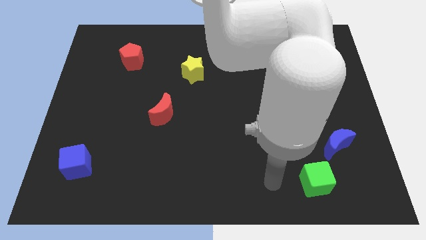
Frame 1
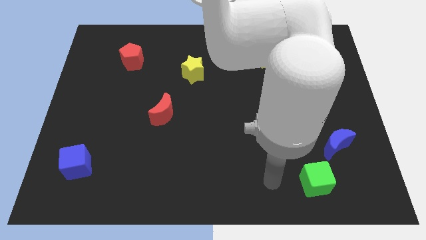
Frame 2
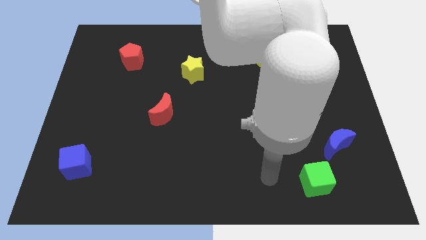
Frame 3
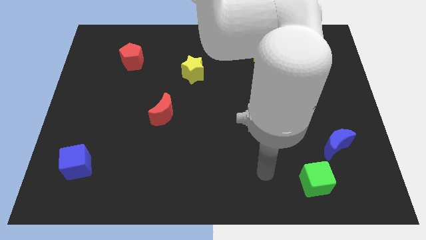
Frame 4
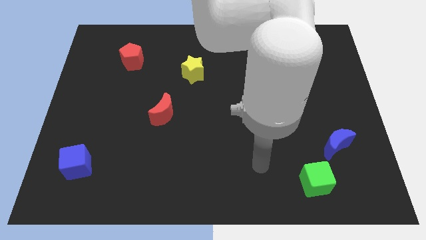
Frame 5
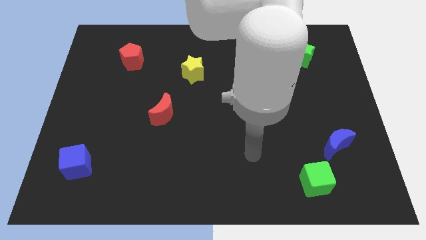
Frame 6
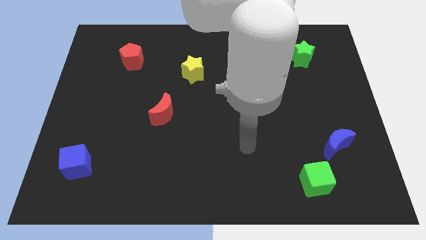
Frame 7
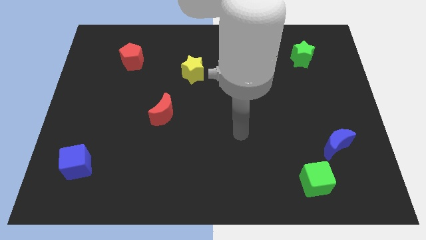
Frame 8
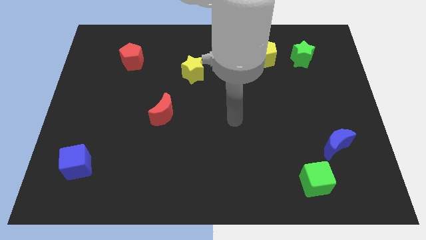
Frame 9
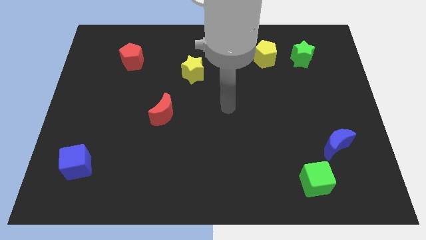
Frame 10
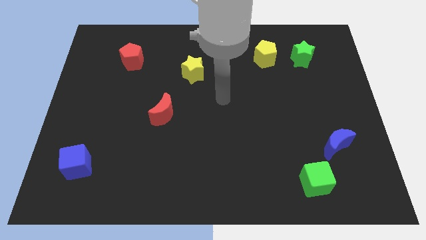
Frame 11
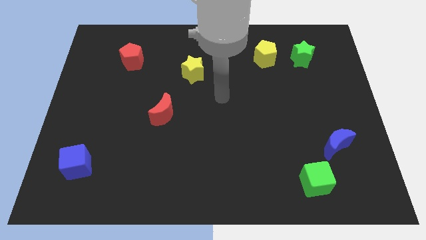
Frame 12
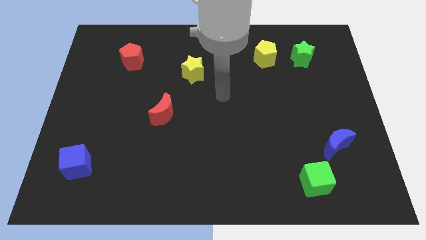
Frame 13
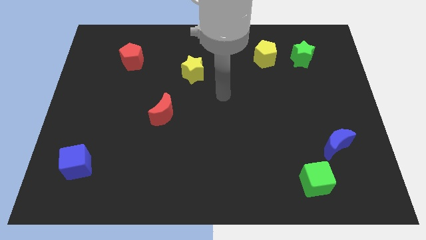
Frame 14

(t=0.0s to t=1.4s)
move your arm towards the center top of the board

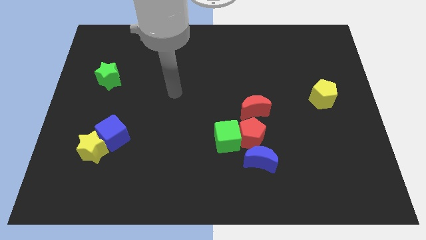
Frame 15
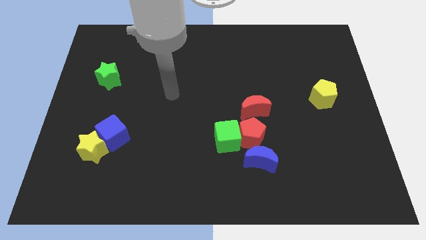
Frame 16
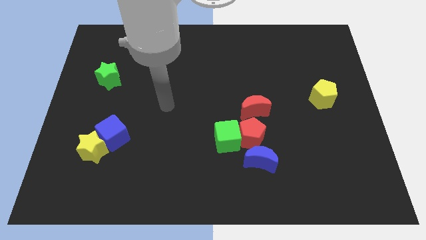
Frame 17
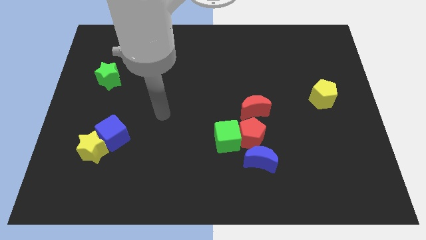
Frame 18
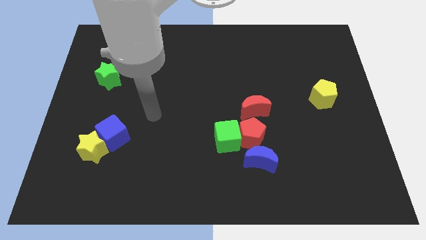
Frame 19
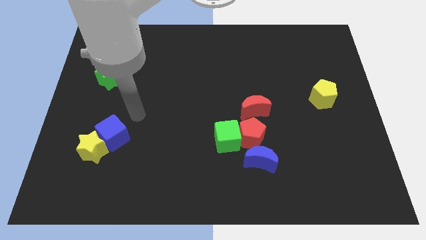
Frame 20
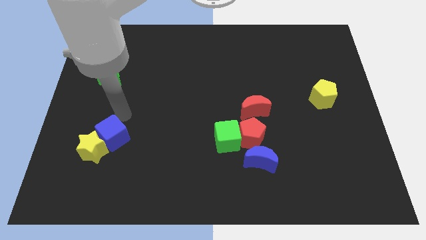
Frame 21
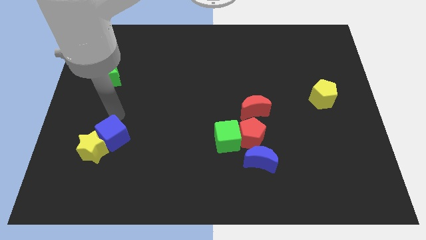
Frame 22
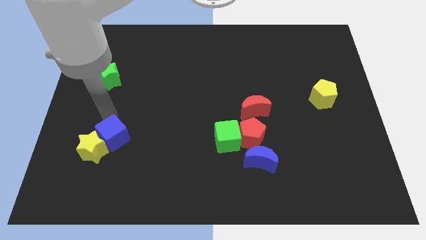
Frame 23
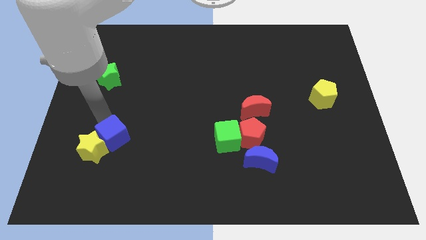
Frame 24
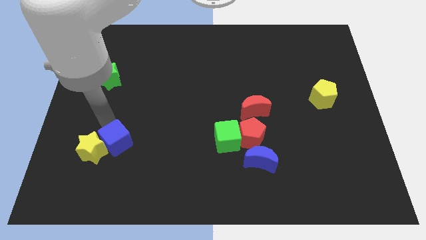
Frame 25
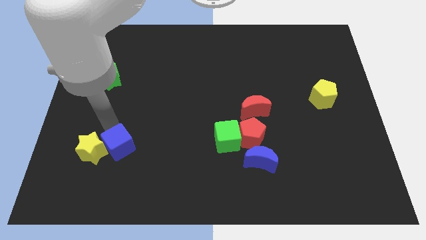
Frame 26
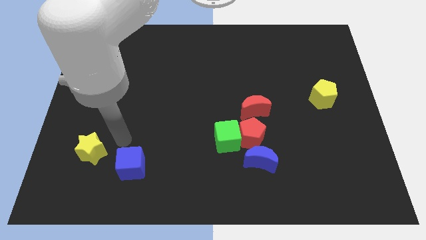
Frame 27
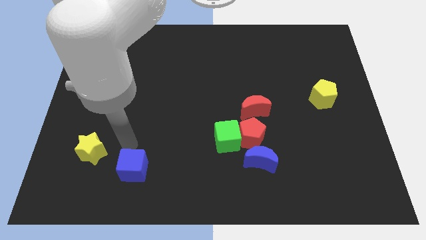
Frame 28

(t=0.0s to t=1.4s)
separate the blue cube from the yellow star

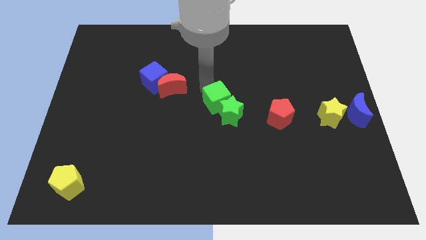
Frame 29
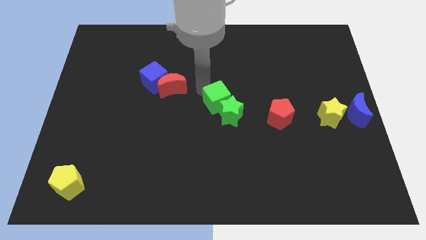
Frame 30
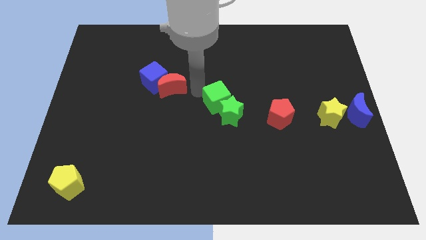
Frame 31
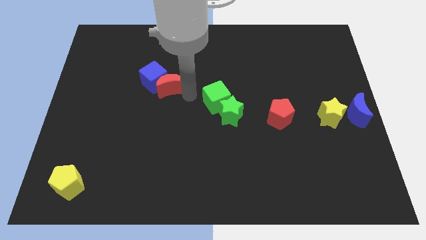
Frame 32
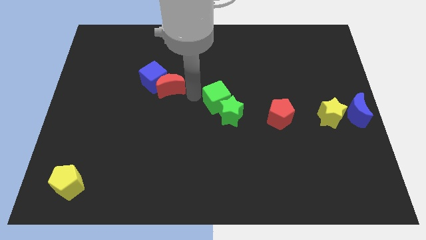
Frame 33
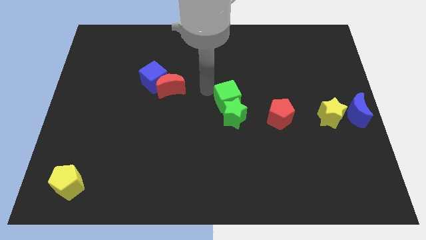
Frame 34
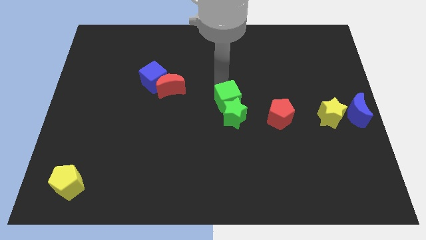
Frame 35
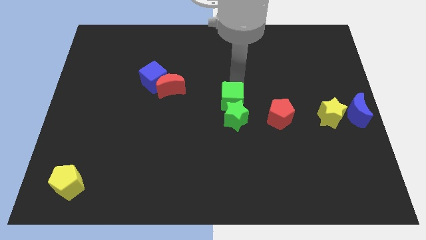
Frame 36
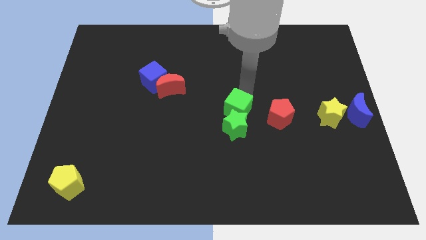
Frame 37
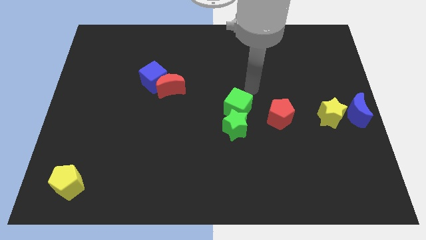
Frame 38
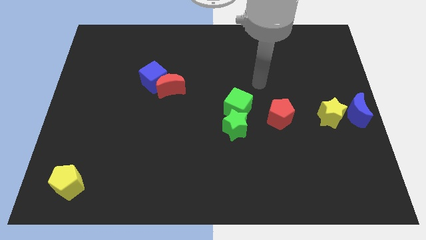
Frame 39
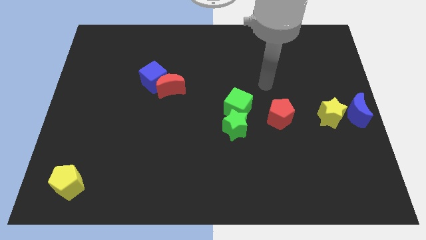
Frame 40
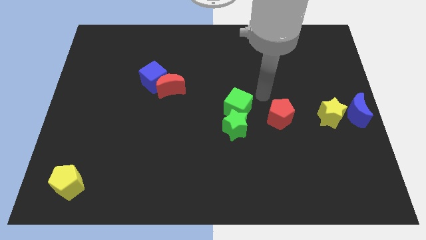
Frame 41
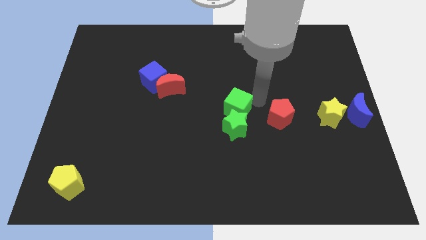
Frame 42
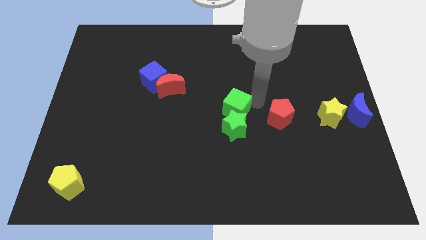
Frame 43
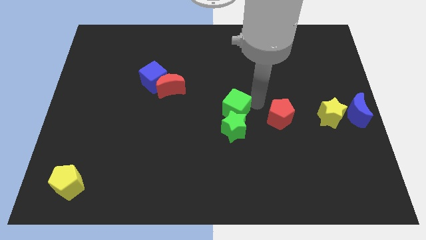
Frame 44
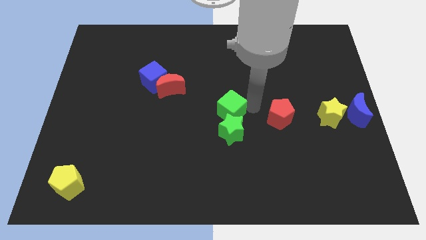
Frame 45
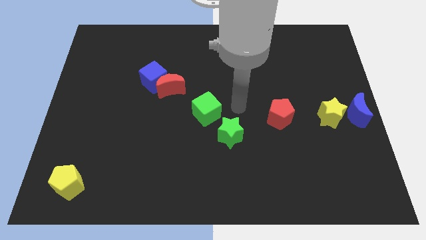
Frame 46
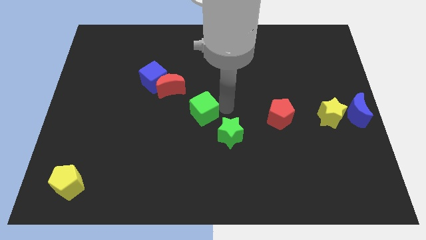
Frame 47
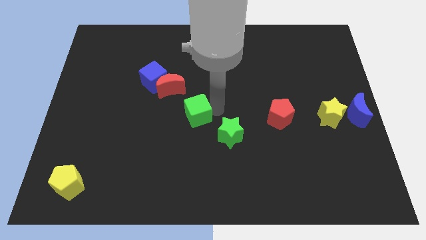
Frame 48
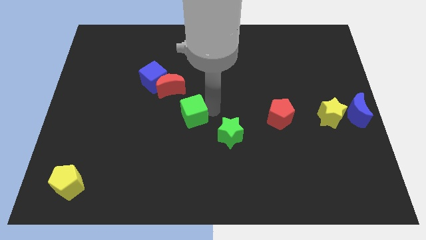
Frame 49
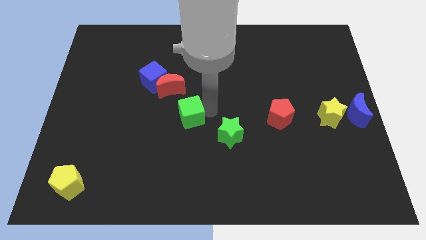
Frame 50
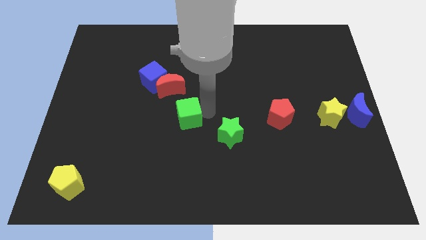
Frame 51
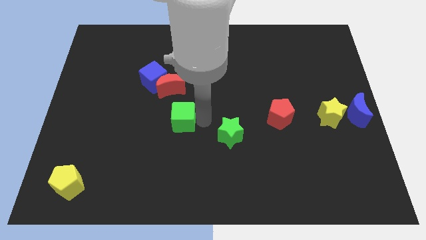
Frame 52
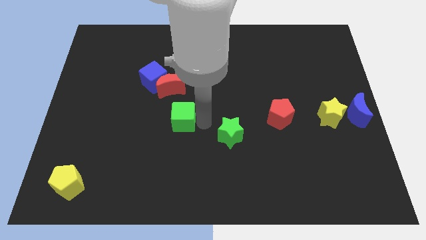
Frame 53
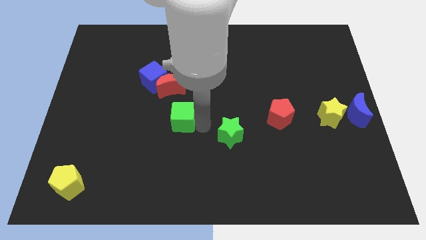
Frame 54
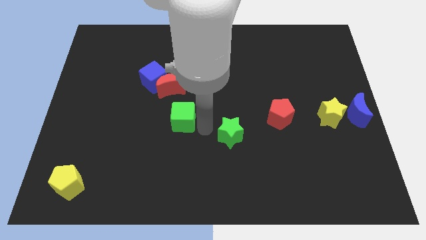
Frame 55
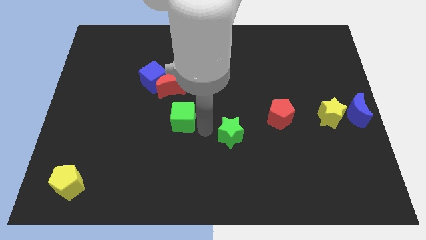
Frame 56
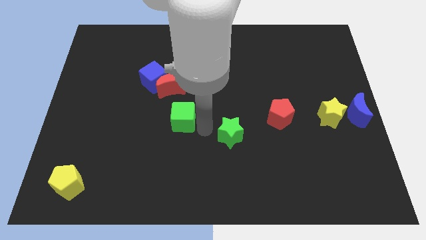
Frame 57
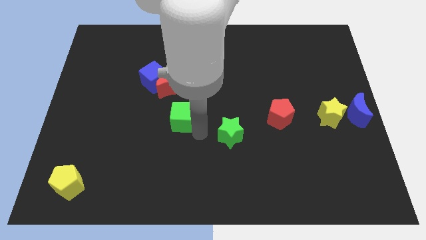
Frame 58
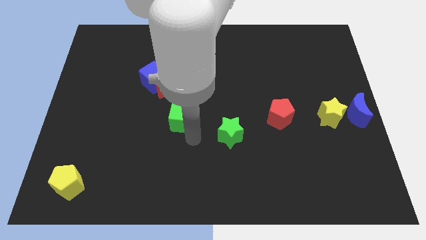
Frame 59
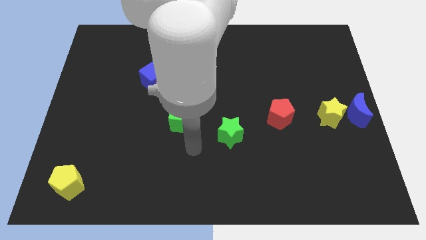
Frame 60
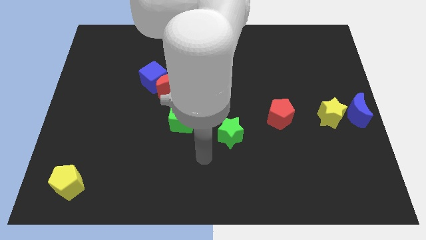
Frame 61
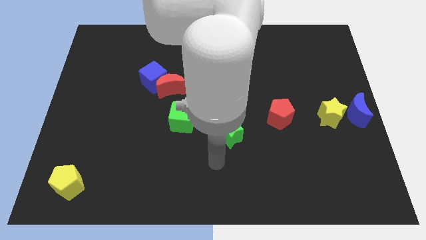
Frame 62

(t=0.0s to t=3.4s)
place green cube to the bottom of red crescent

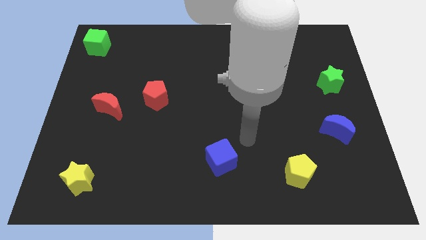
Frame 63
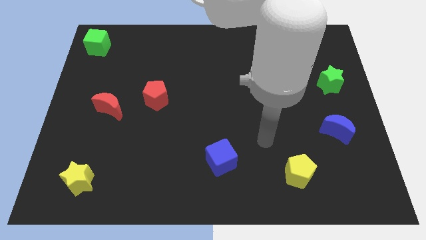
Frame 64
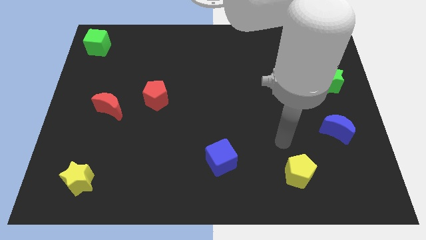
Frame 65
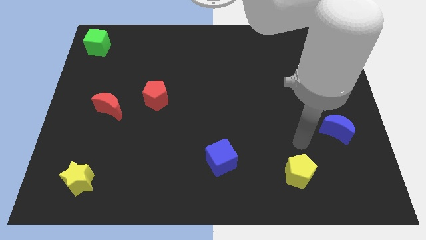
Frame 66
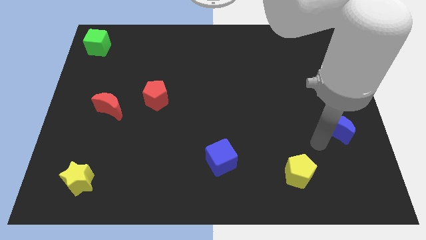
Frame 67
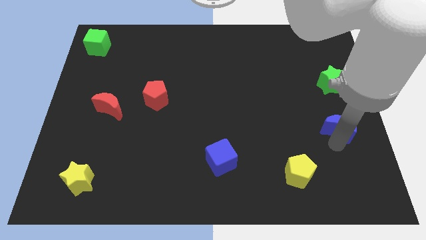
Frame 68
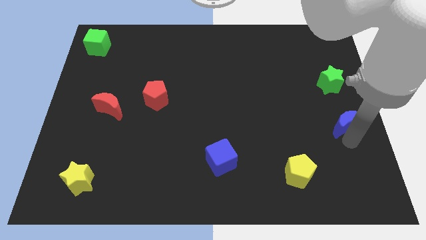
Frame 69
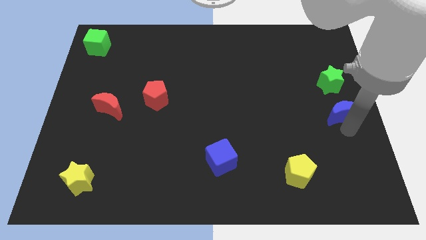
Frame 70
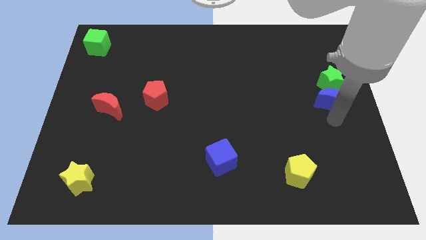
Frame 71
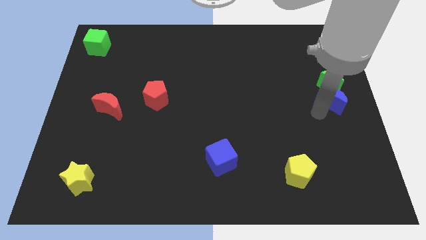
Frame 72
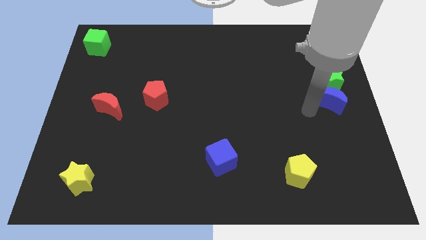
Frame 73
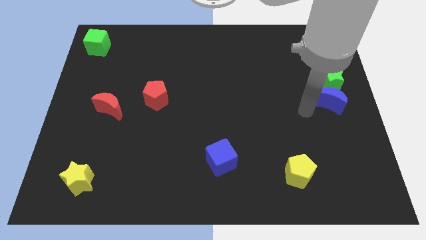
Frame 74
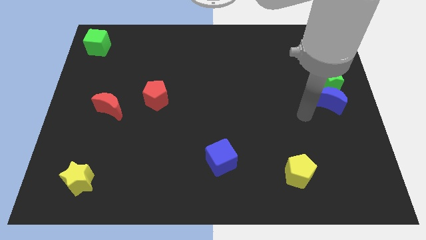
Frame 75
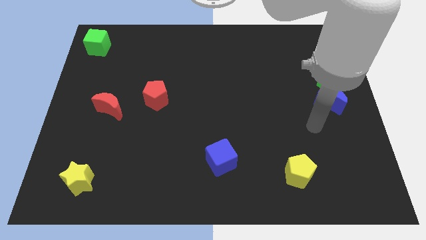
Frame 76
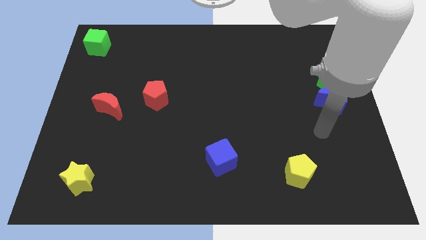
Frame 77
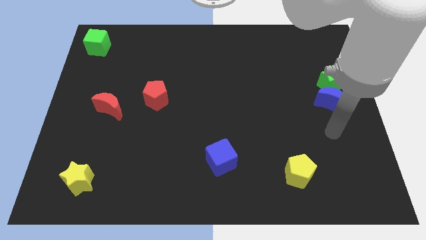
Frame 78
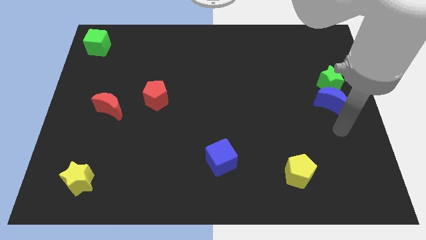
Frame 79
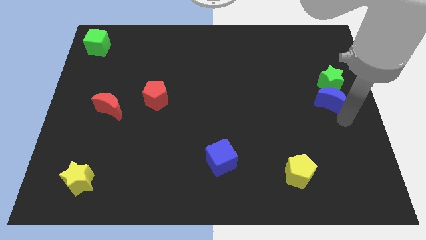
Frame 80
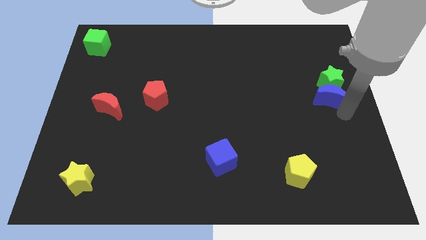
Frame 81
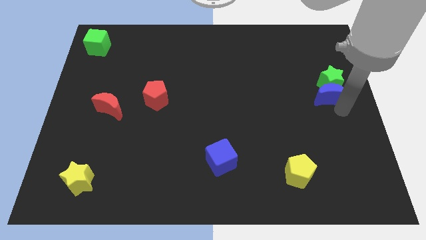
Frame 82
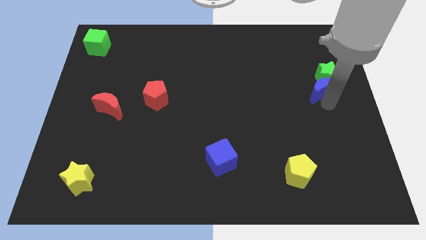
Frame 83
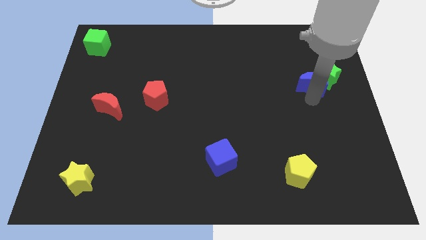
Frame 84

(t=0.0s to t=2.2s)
move blue moon into green star

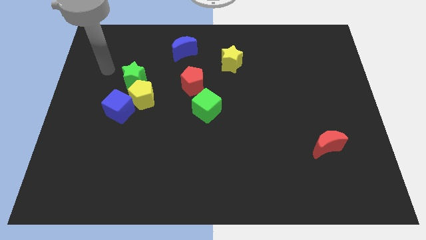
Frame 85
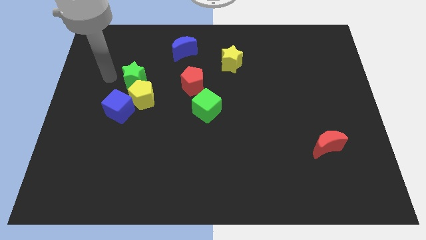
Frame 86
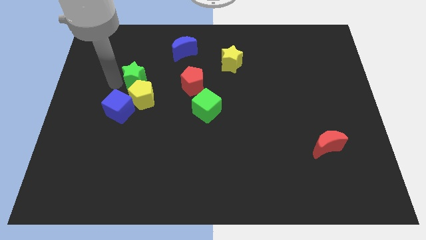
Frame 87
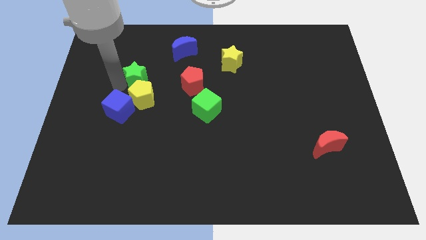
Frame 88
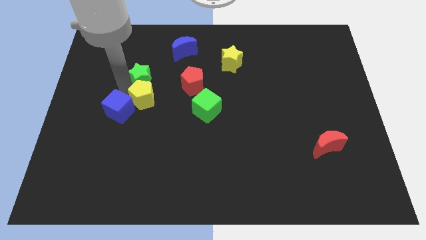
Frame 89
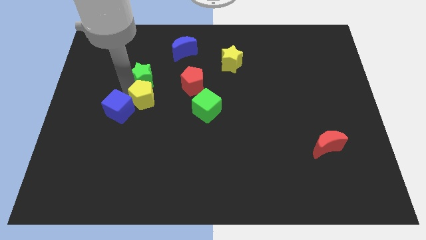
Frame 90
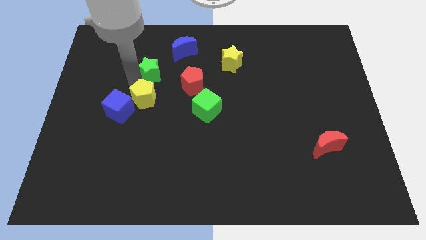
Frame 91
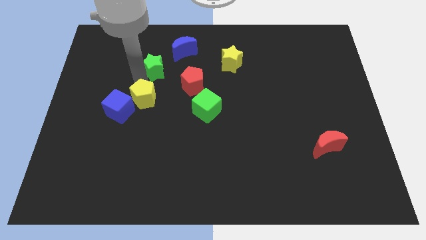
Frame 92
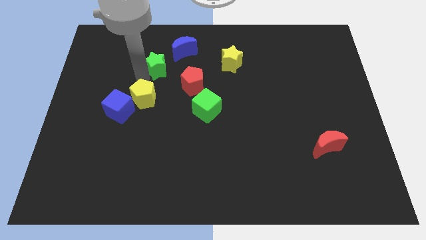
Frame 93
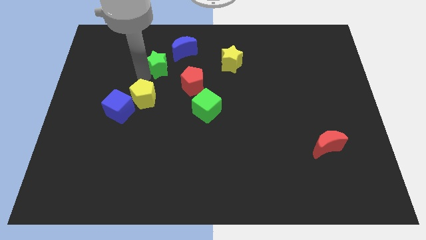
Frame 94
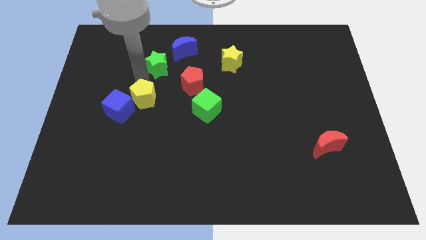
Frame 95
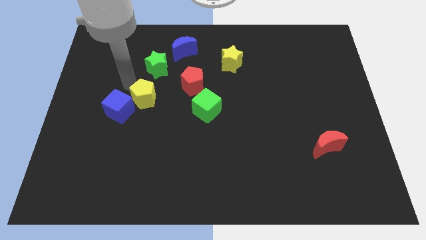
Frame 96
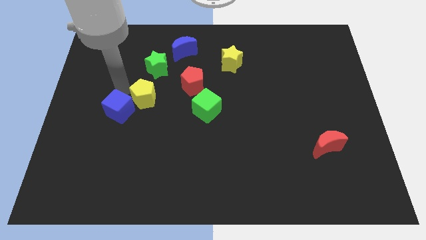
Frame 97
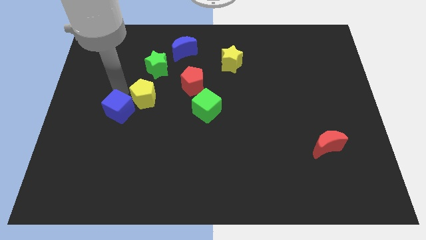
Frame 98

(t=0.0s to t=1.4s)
push the green star diagonal to the blue moon
